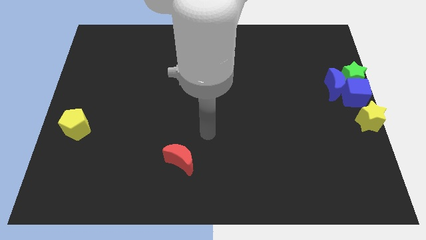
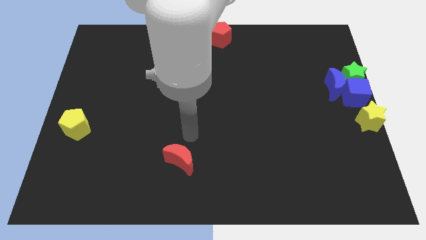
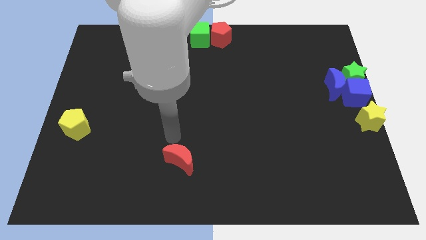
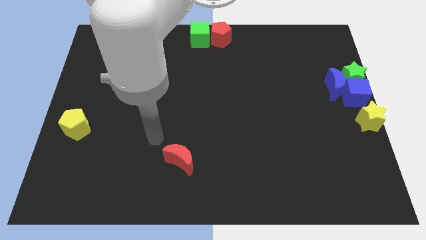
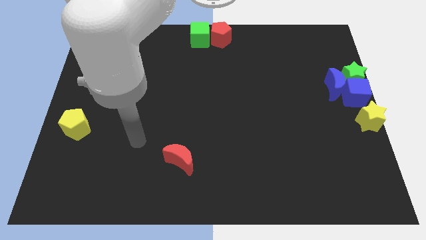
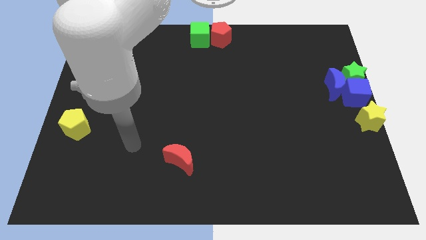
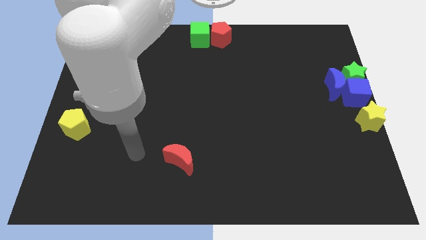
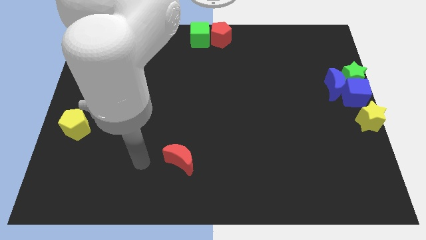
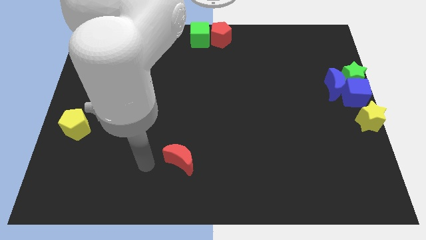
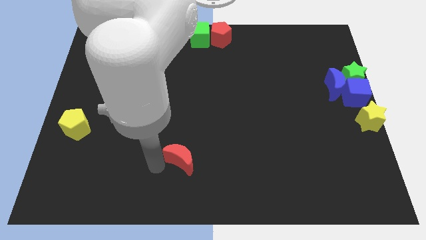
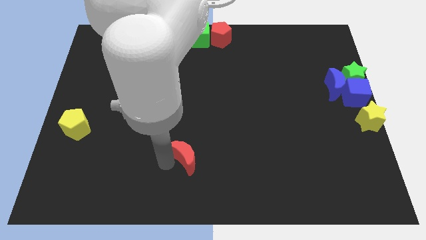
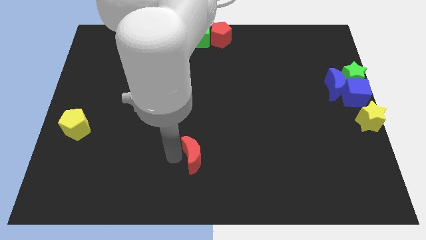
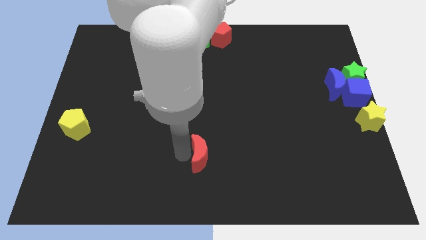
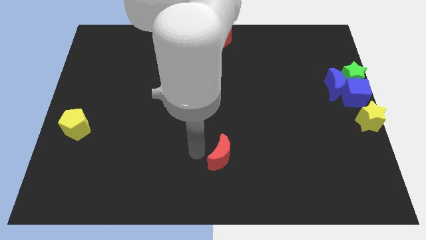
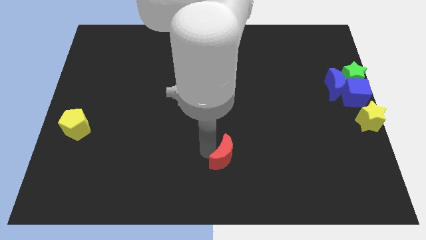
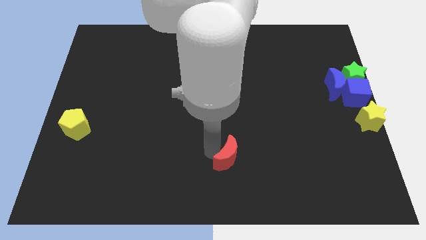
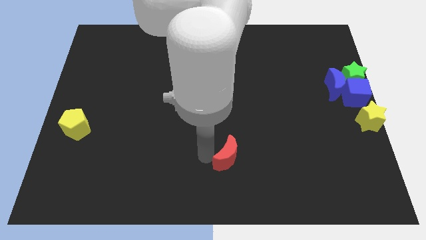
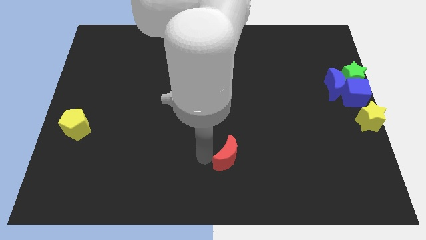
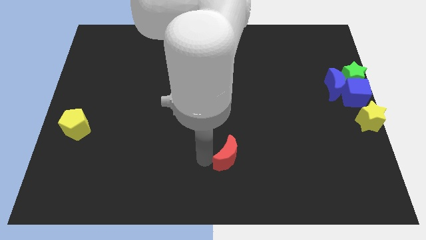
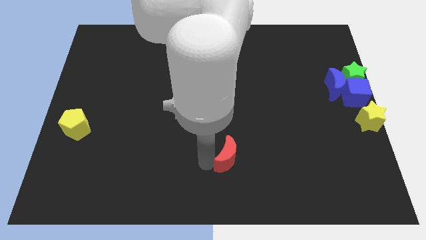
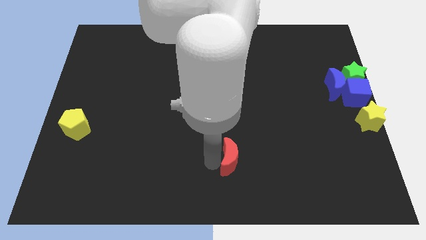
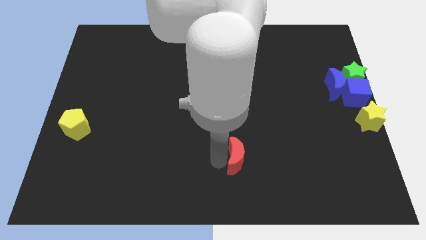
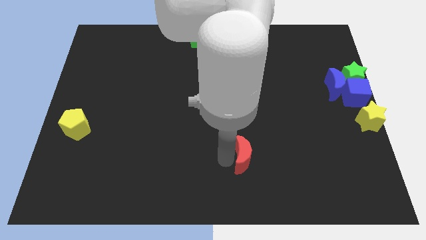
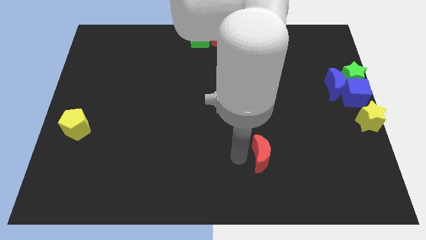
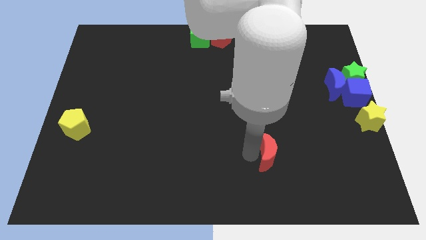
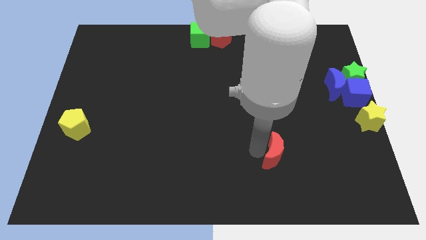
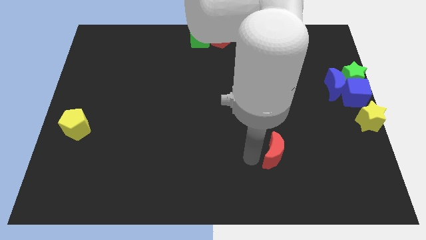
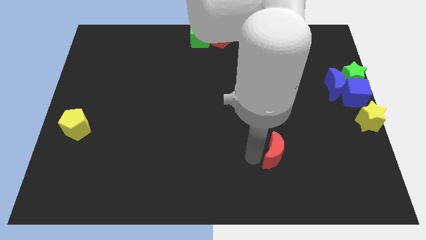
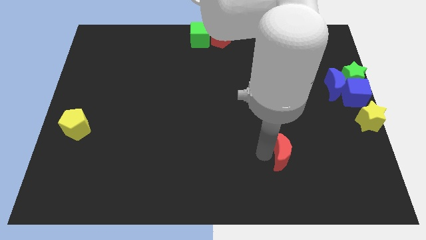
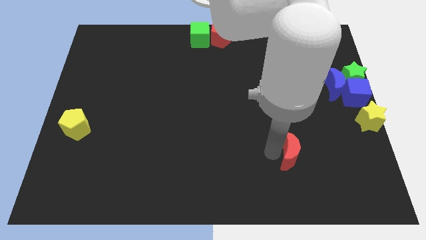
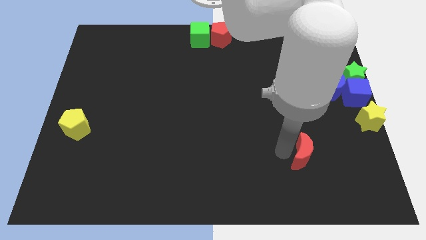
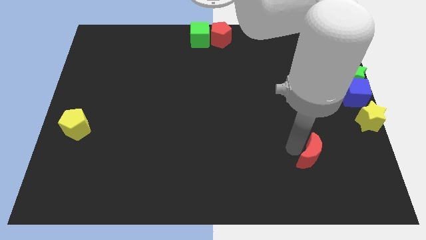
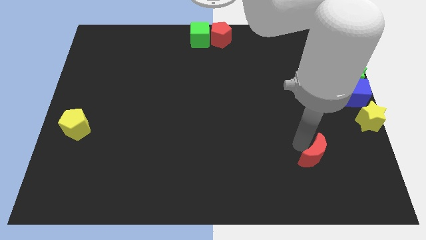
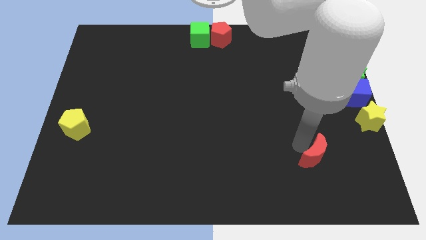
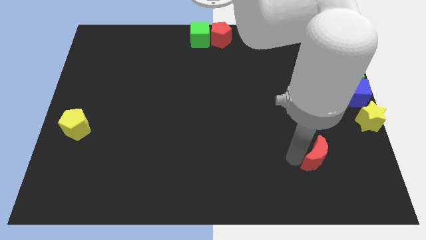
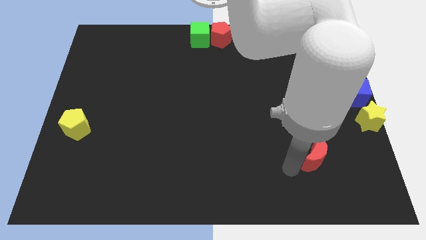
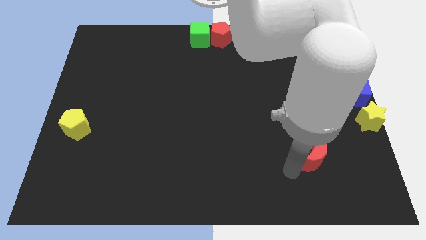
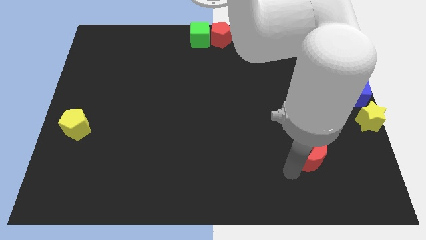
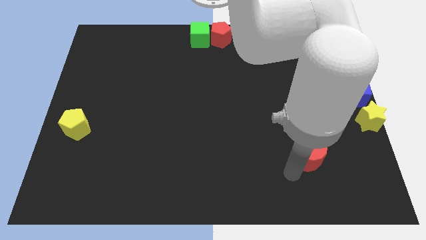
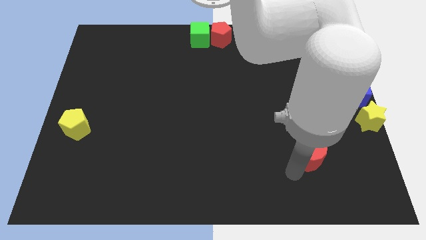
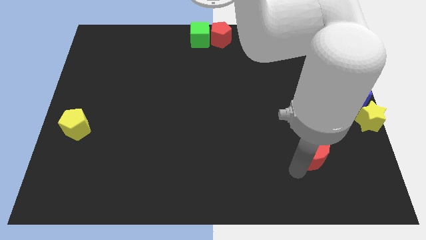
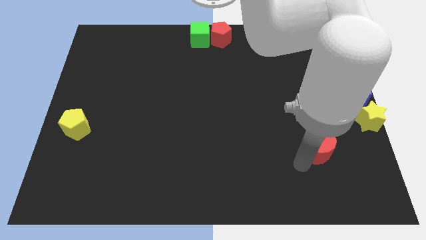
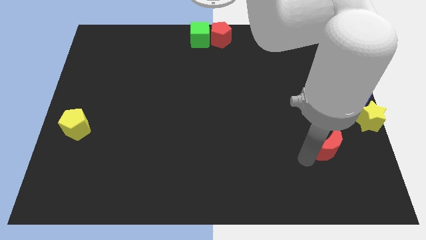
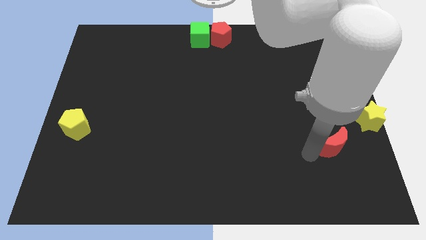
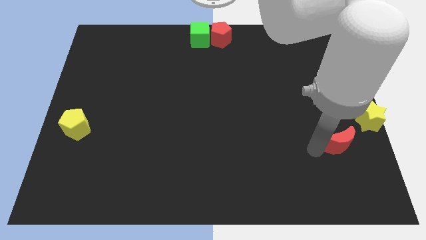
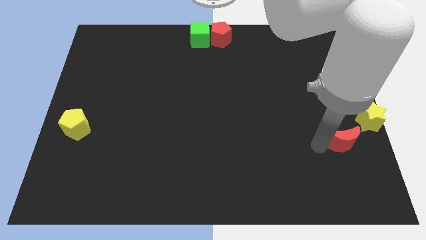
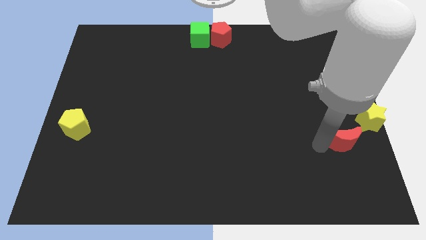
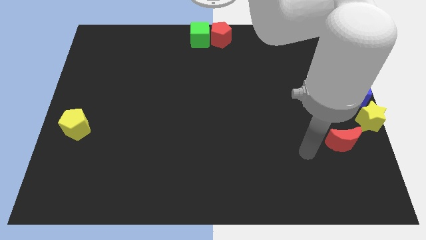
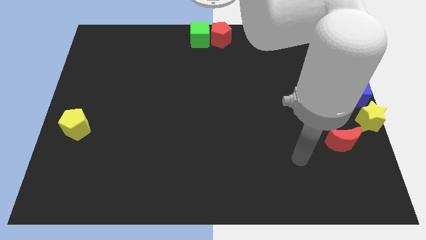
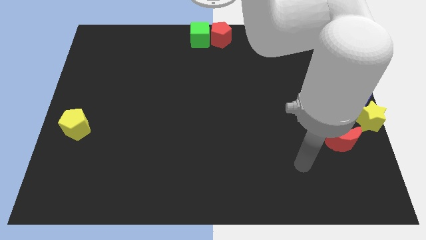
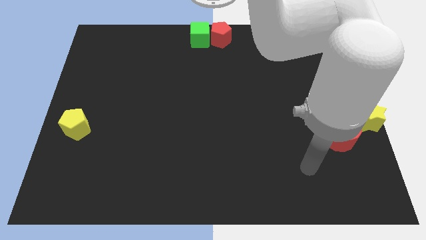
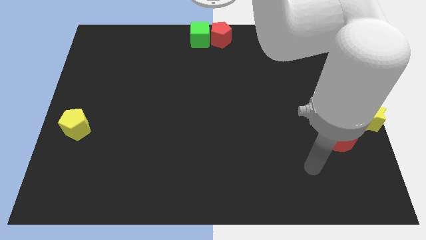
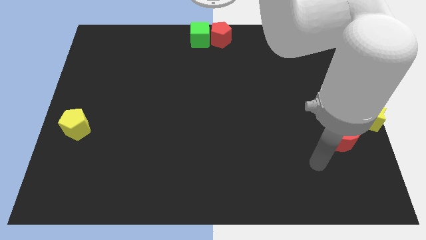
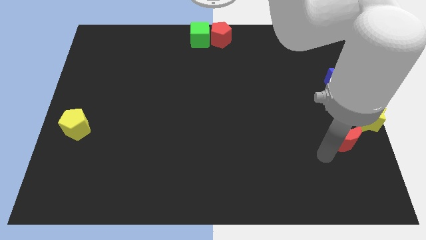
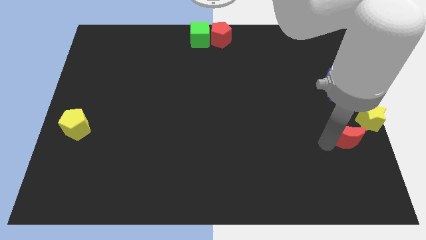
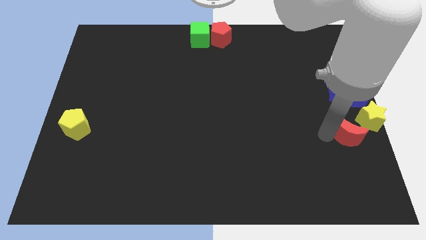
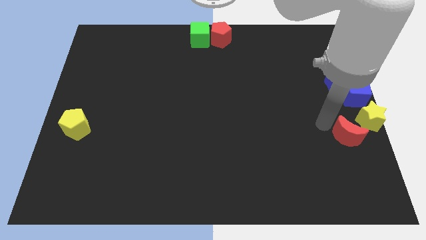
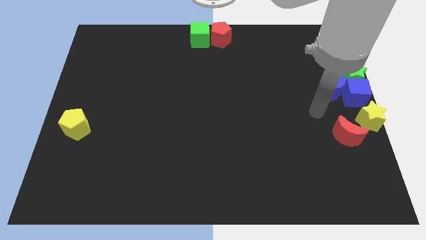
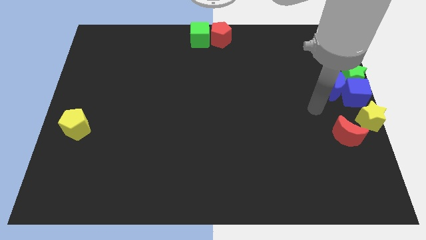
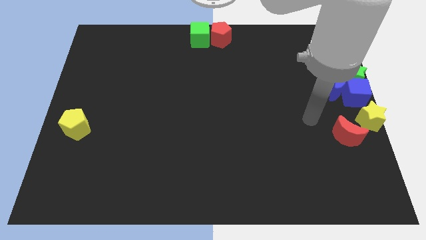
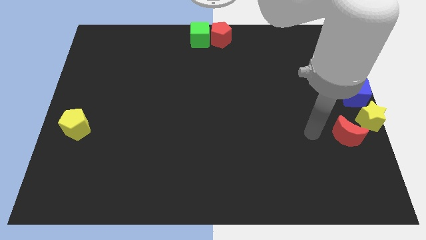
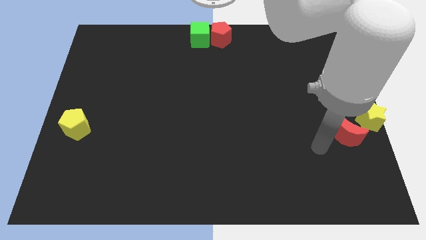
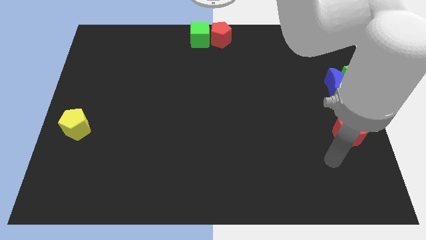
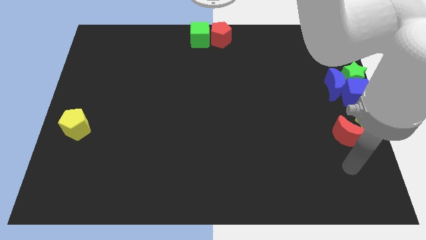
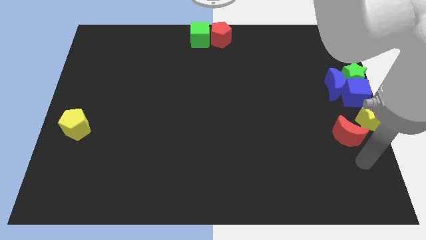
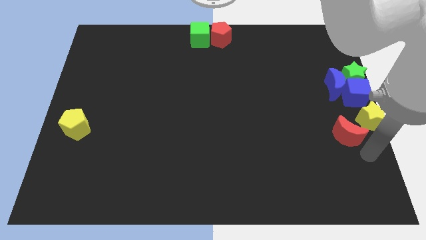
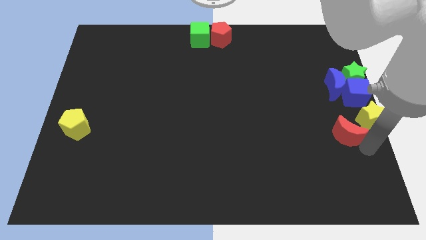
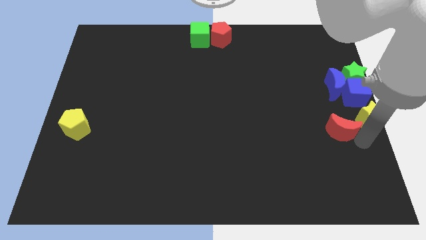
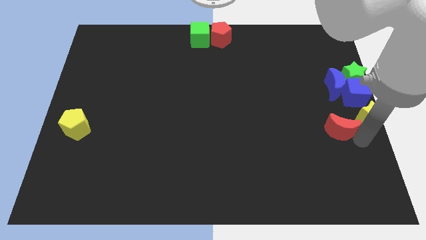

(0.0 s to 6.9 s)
place the red crescent to the left of the yellow star

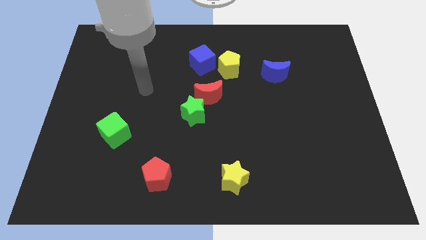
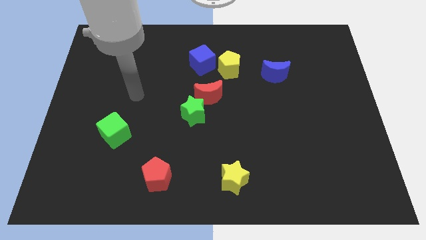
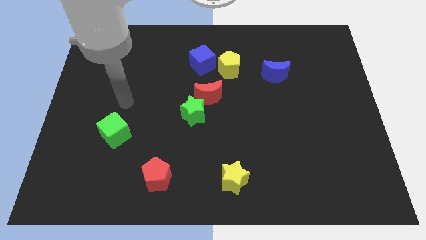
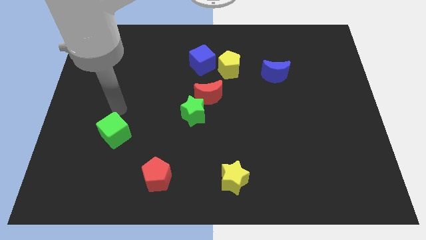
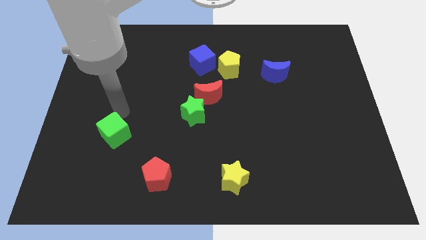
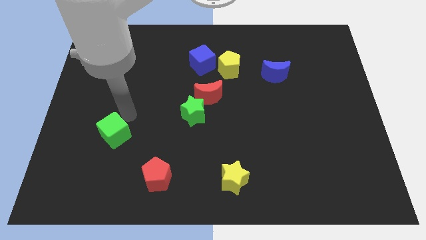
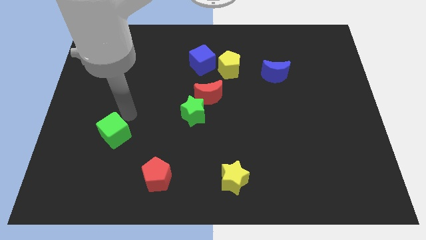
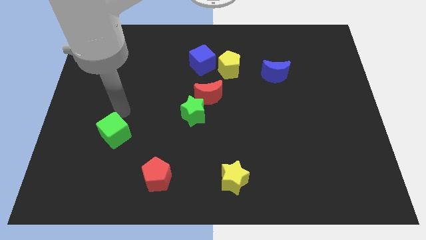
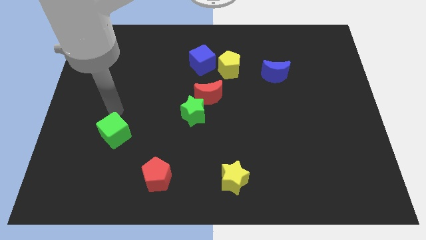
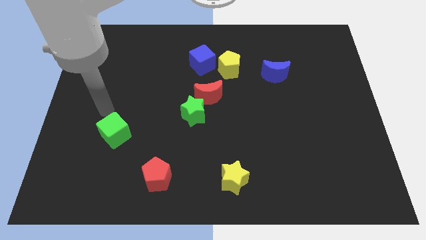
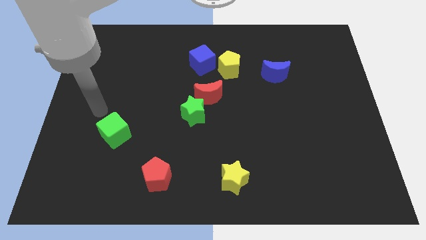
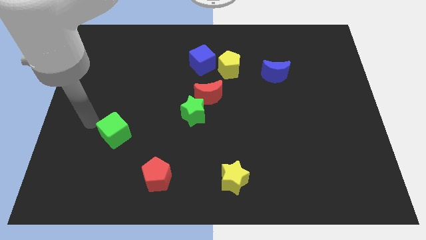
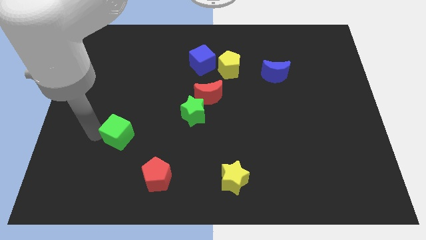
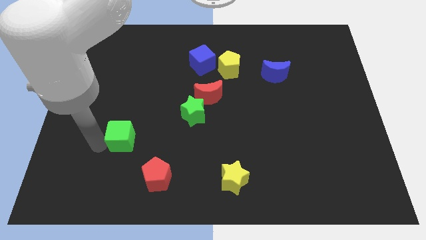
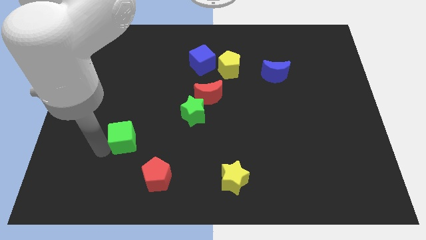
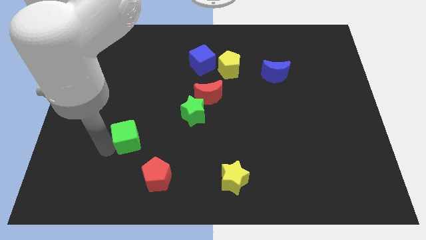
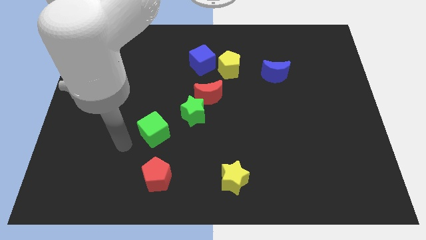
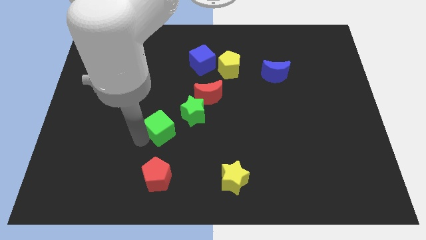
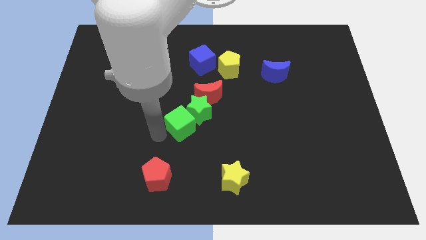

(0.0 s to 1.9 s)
push the green cube into the green star

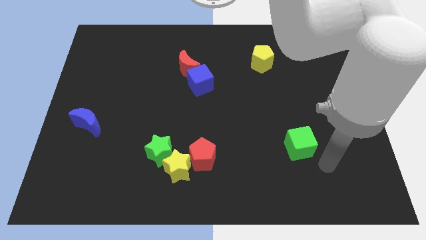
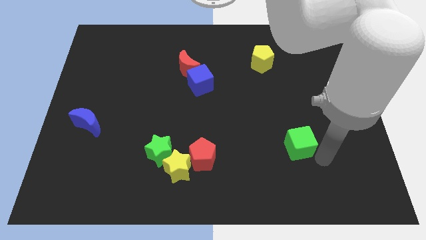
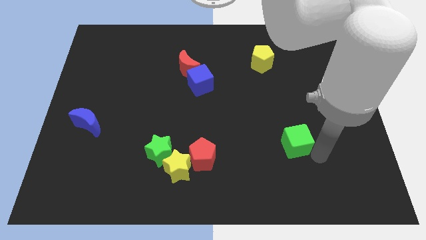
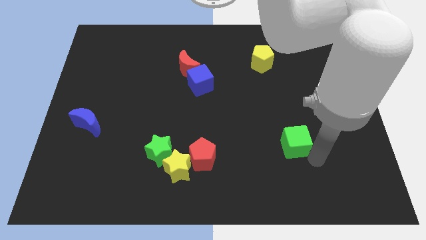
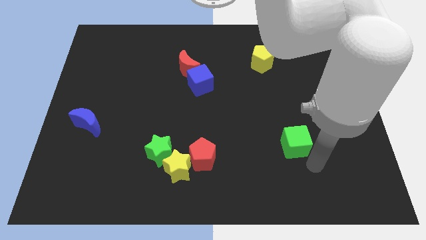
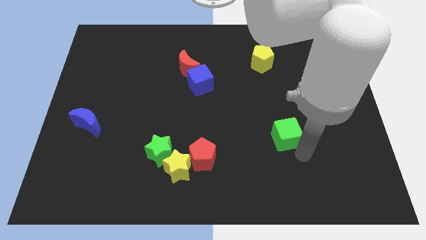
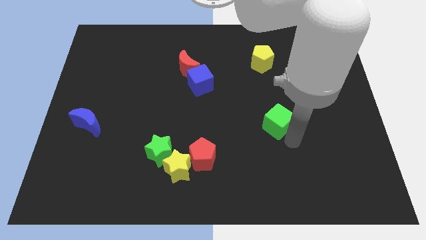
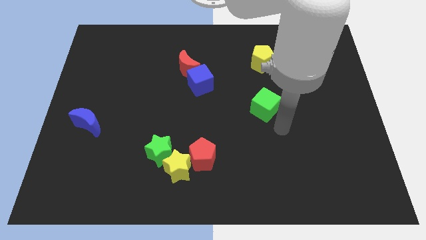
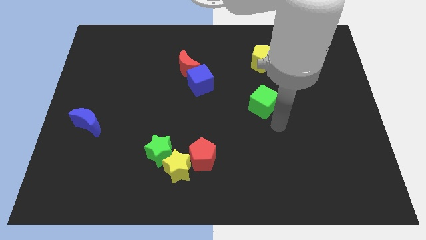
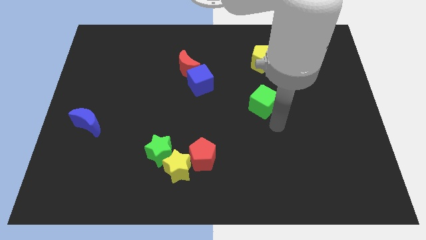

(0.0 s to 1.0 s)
move green cube below the yellow pentagon
